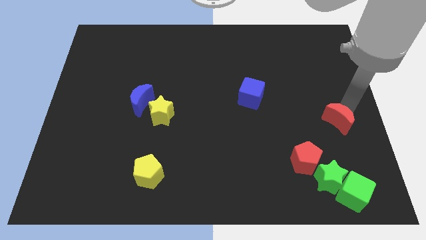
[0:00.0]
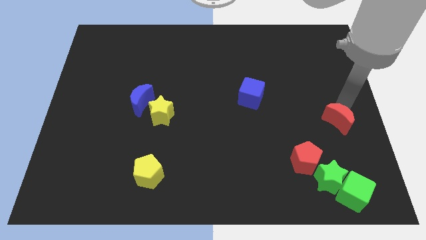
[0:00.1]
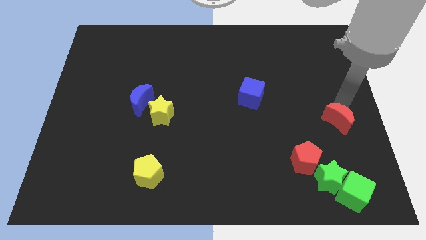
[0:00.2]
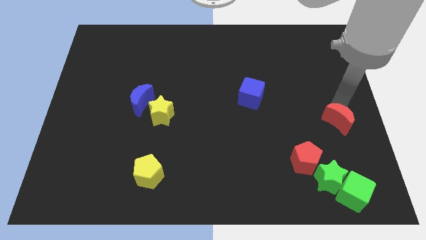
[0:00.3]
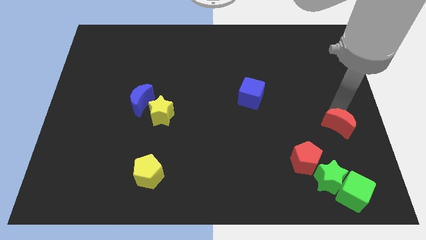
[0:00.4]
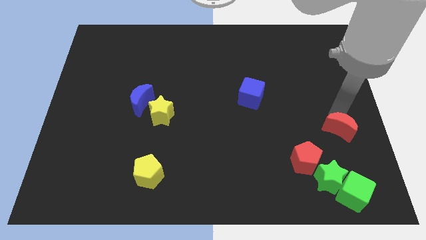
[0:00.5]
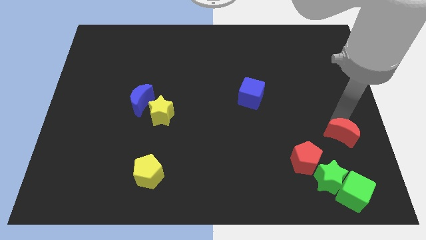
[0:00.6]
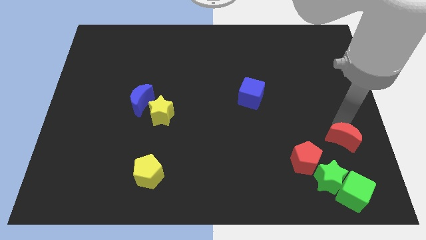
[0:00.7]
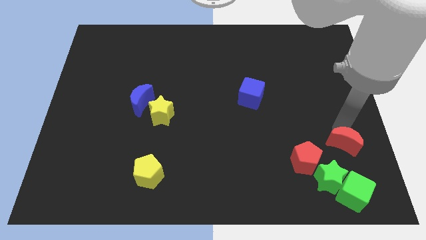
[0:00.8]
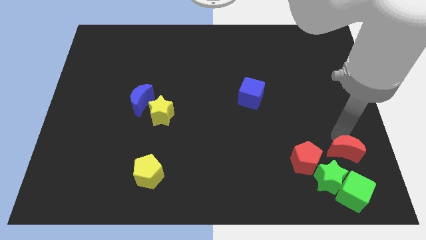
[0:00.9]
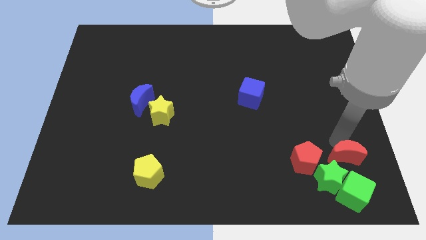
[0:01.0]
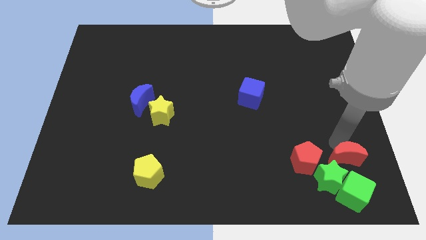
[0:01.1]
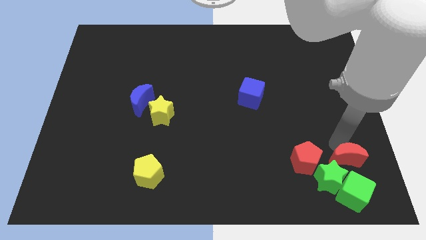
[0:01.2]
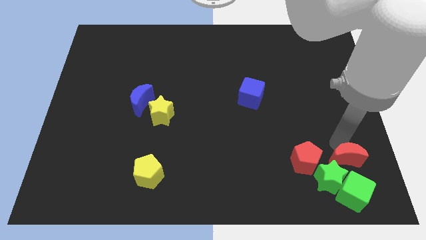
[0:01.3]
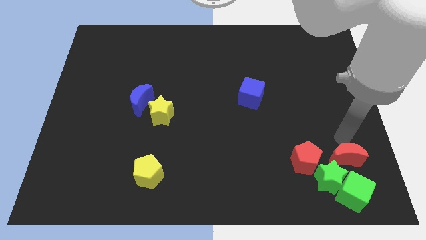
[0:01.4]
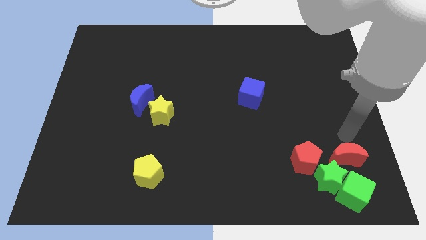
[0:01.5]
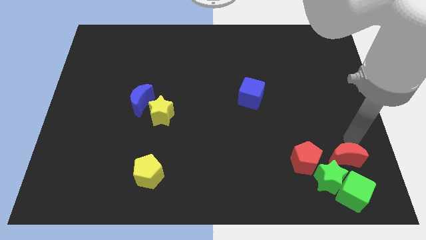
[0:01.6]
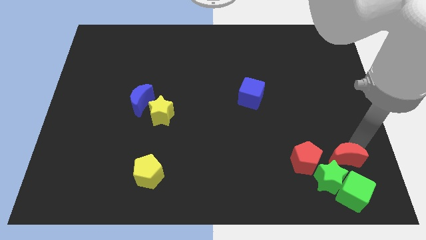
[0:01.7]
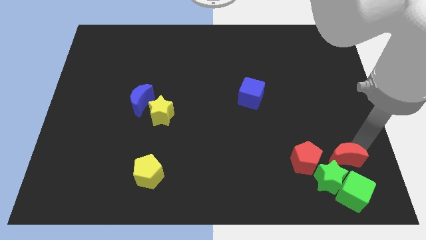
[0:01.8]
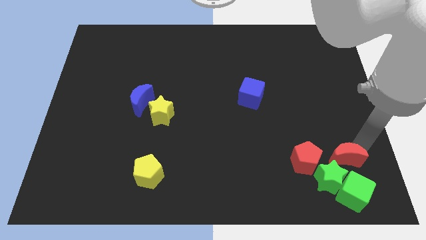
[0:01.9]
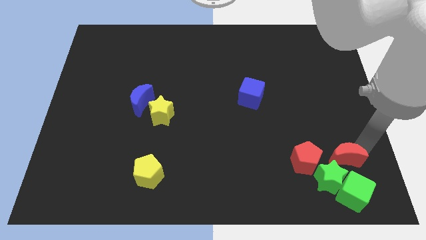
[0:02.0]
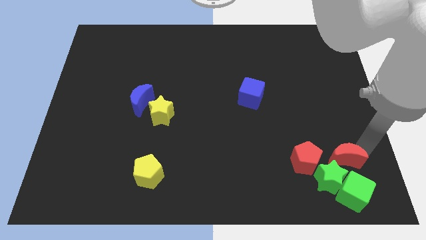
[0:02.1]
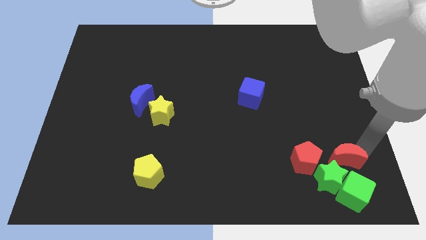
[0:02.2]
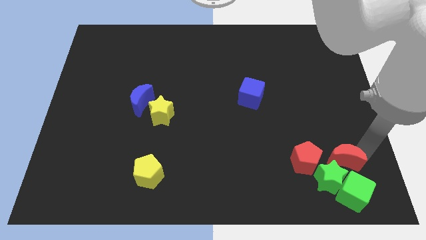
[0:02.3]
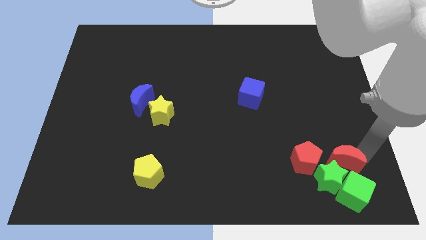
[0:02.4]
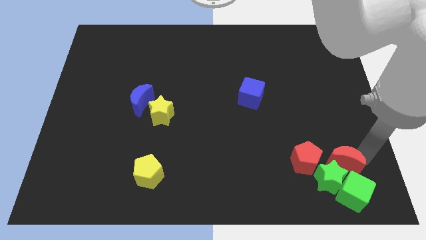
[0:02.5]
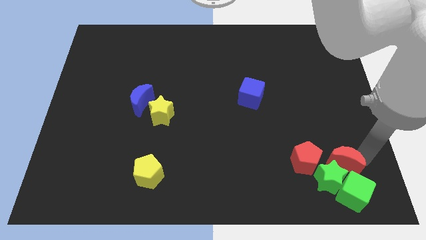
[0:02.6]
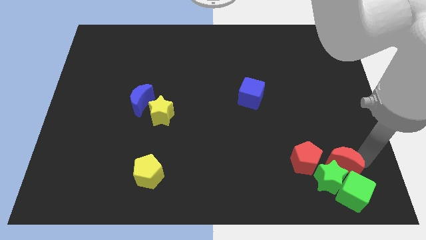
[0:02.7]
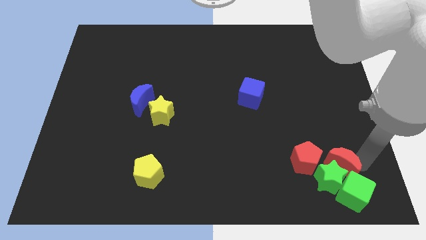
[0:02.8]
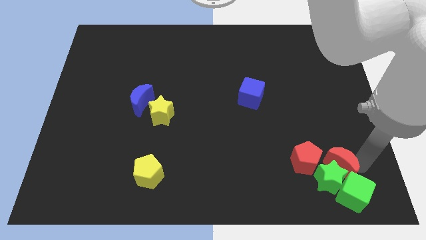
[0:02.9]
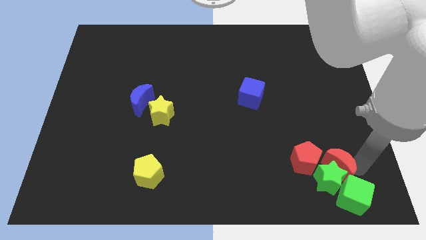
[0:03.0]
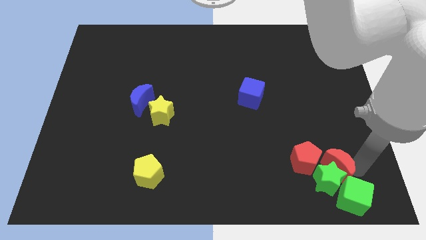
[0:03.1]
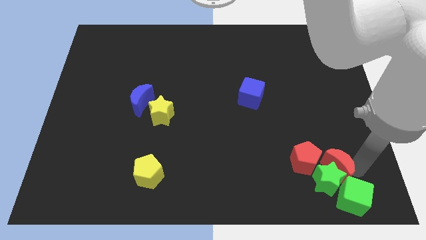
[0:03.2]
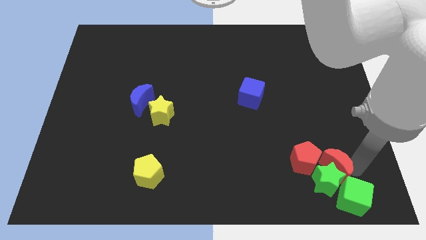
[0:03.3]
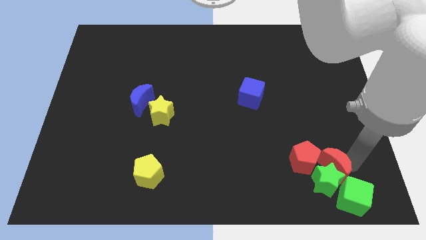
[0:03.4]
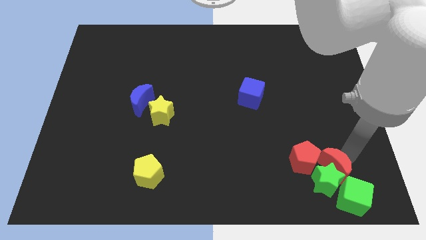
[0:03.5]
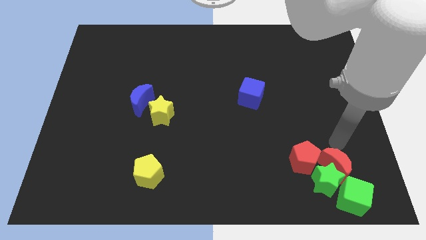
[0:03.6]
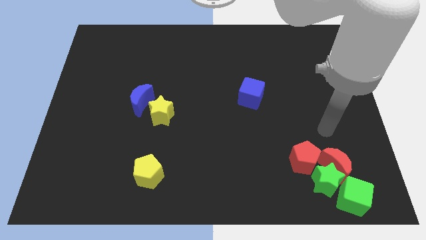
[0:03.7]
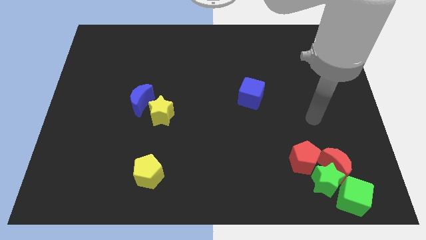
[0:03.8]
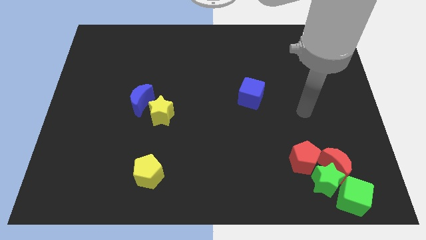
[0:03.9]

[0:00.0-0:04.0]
push the red crescent into thegreen star

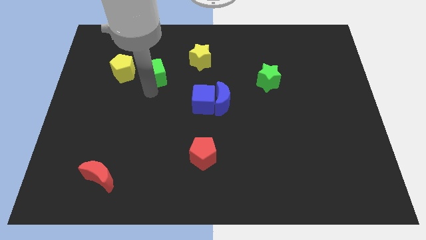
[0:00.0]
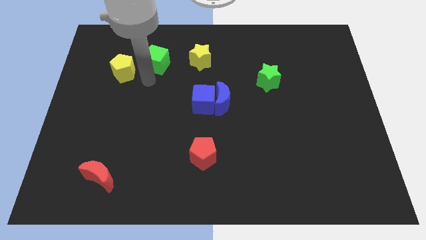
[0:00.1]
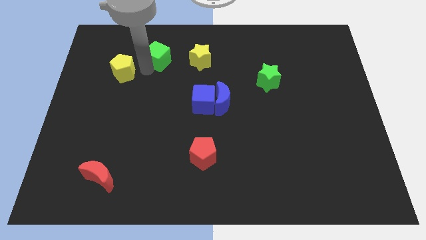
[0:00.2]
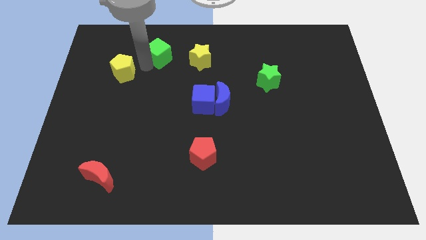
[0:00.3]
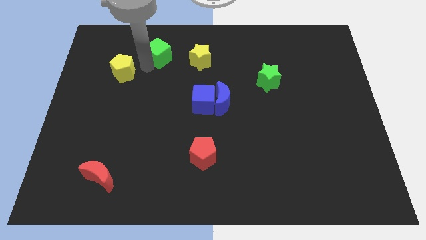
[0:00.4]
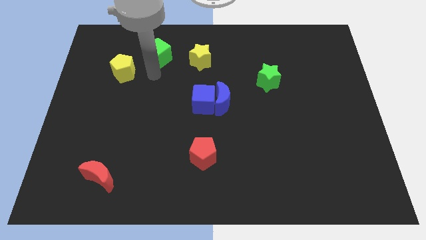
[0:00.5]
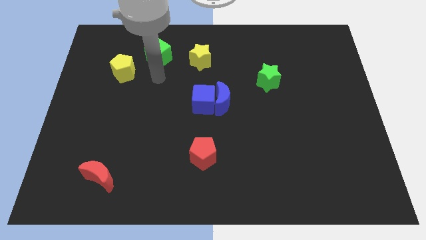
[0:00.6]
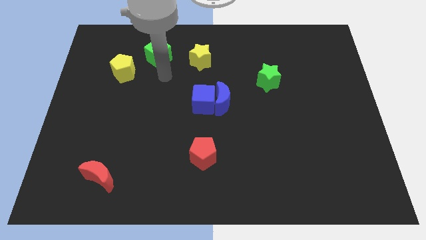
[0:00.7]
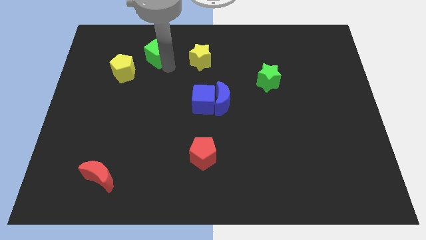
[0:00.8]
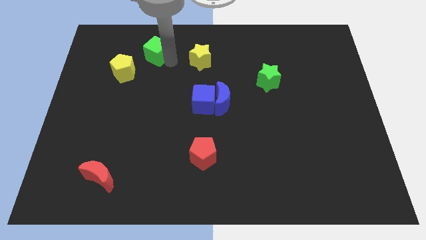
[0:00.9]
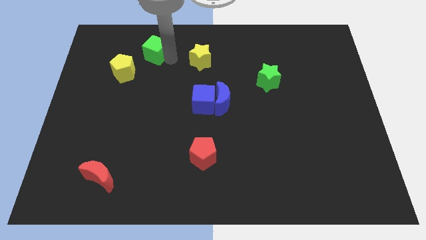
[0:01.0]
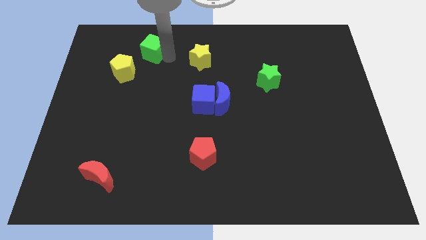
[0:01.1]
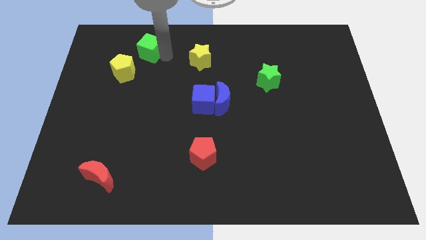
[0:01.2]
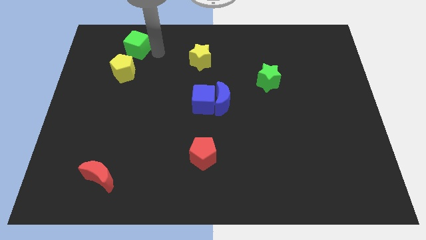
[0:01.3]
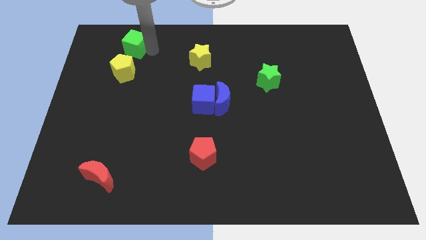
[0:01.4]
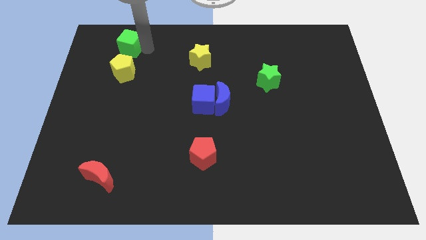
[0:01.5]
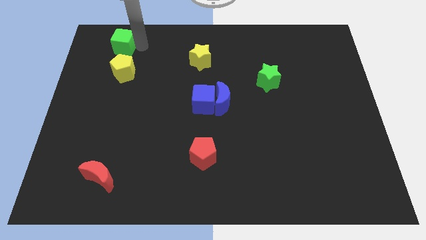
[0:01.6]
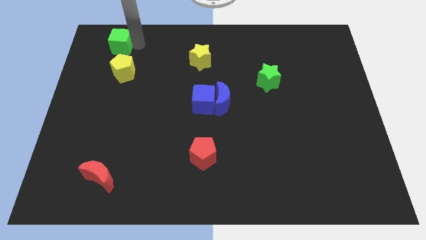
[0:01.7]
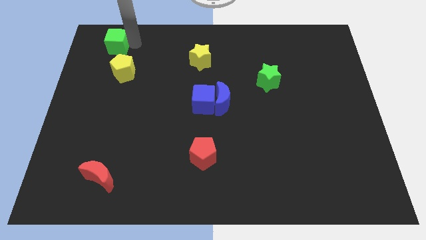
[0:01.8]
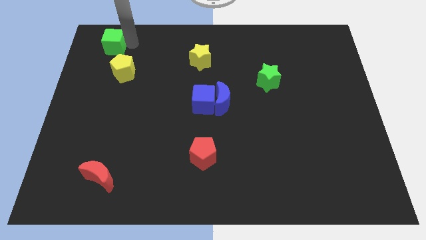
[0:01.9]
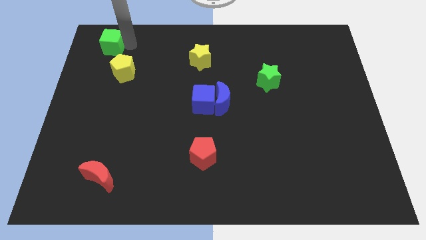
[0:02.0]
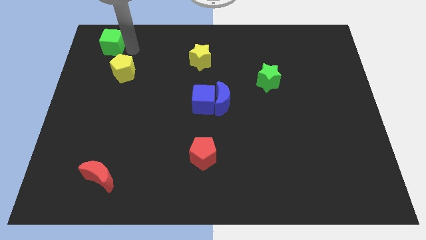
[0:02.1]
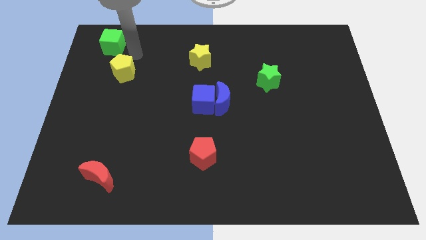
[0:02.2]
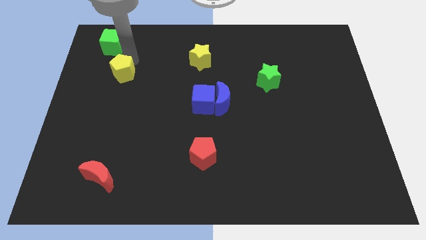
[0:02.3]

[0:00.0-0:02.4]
move the green cube to the top of the yellow pentagon

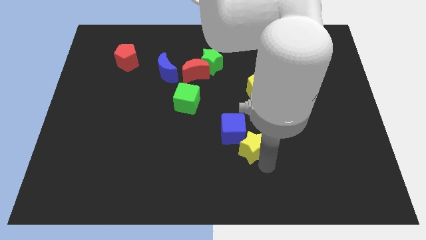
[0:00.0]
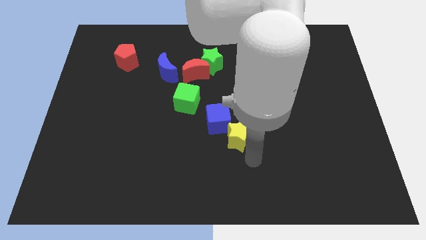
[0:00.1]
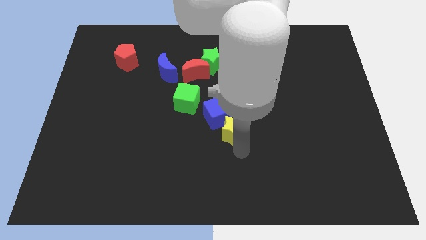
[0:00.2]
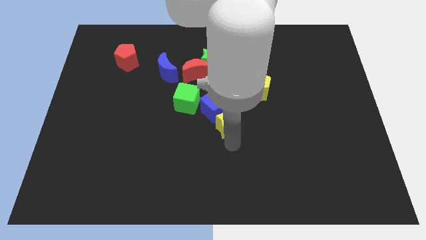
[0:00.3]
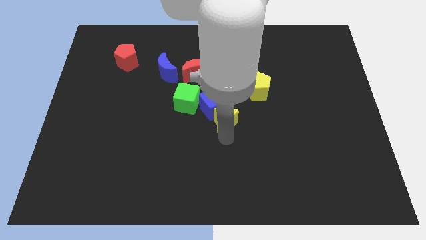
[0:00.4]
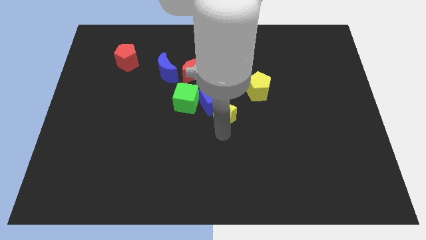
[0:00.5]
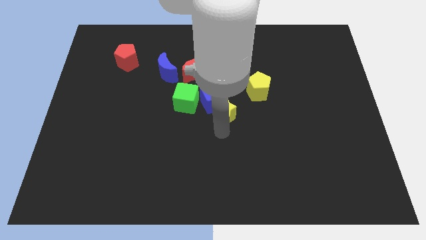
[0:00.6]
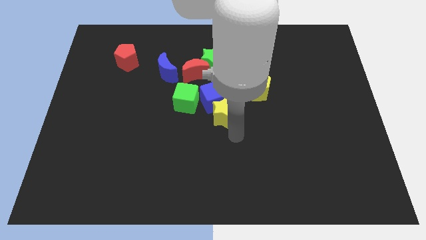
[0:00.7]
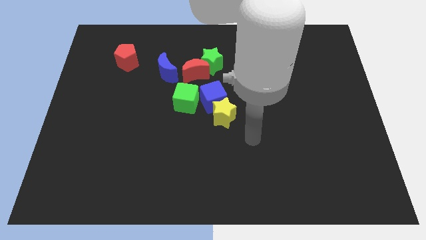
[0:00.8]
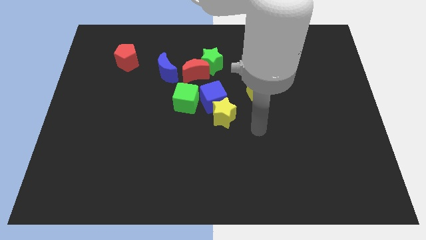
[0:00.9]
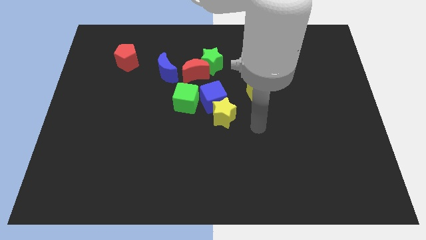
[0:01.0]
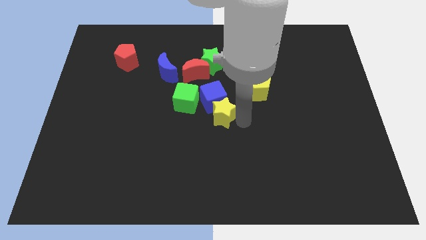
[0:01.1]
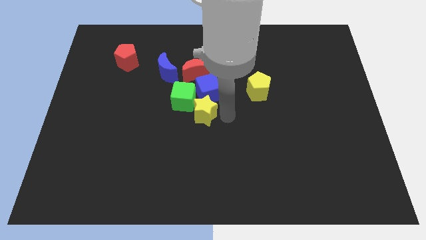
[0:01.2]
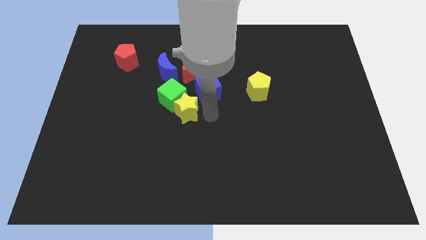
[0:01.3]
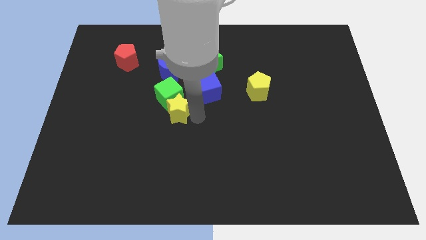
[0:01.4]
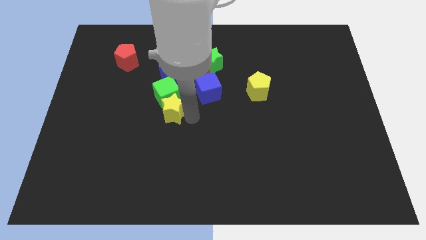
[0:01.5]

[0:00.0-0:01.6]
place the blue cube and yellow star towards the top side of the board

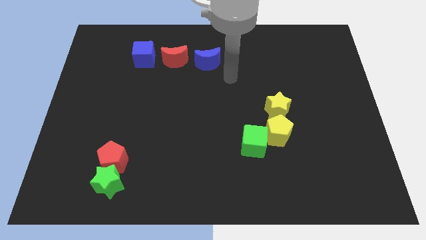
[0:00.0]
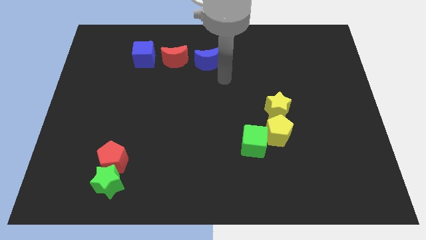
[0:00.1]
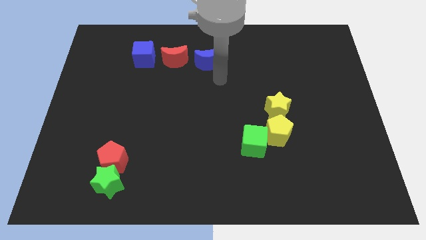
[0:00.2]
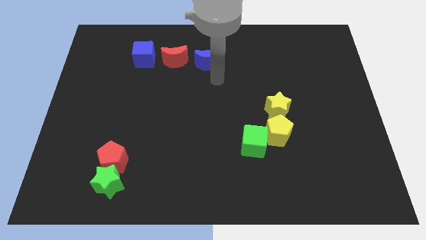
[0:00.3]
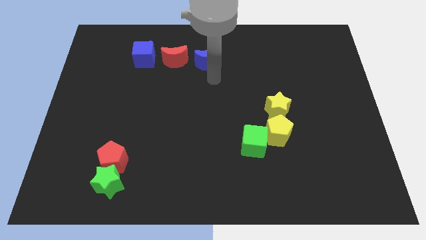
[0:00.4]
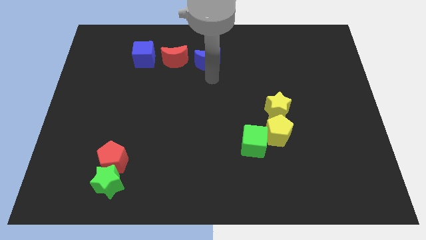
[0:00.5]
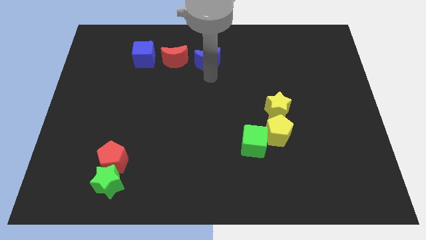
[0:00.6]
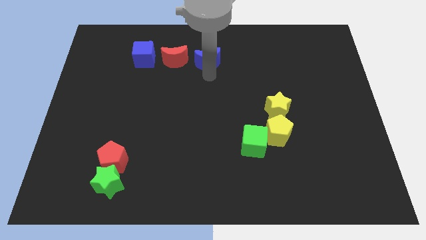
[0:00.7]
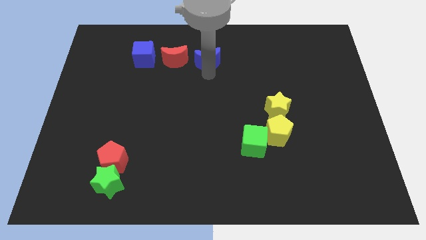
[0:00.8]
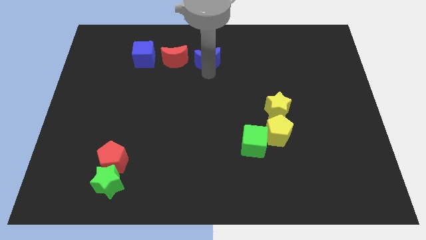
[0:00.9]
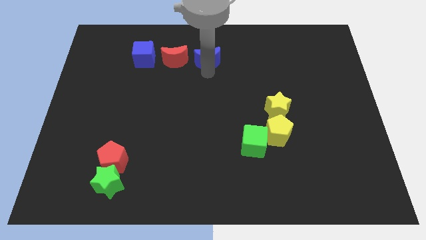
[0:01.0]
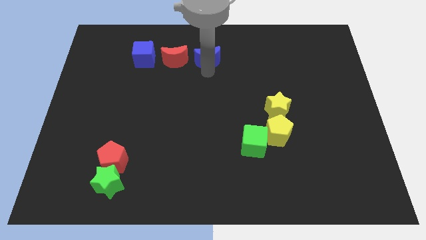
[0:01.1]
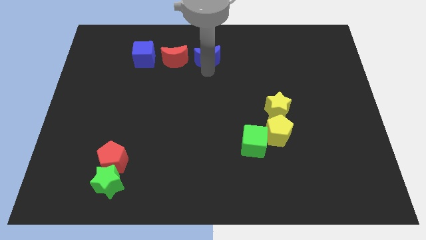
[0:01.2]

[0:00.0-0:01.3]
touch the bottom of blue moon
